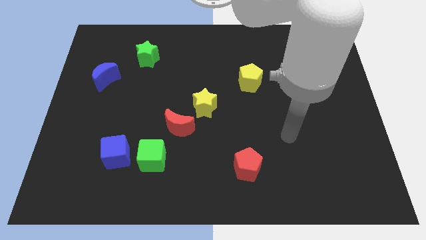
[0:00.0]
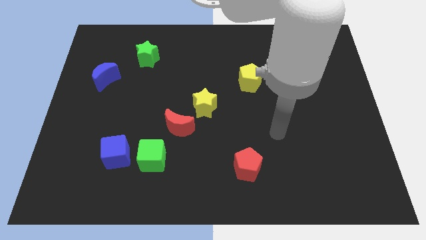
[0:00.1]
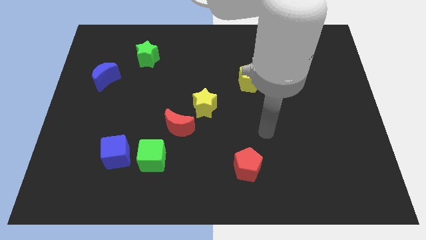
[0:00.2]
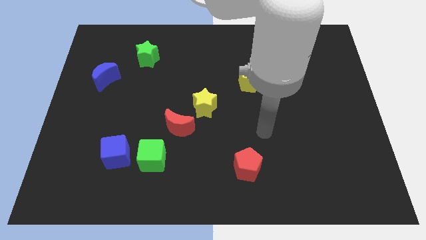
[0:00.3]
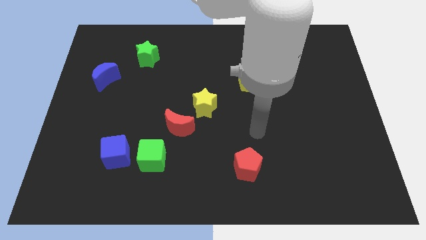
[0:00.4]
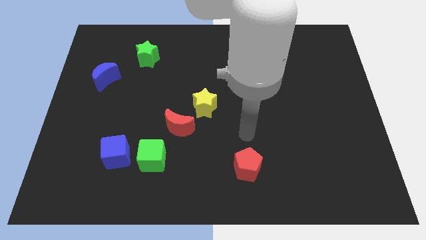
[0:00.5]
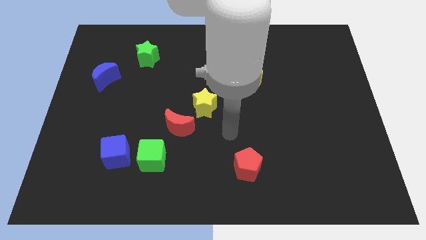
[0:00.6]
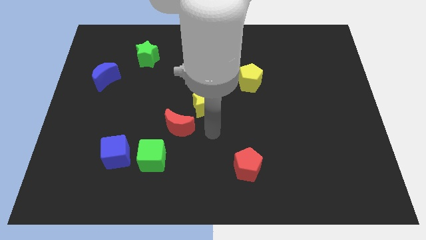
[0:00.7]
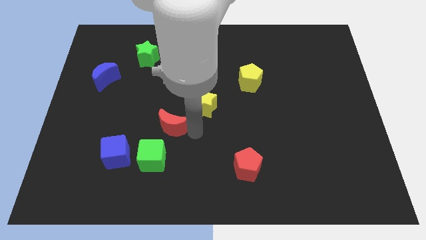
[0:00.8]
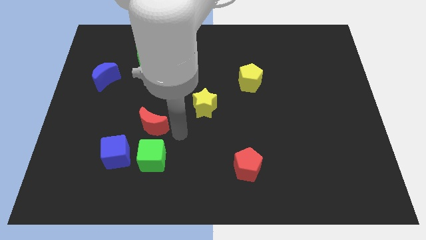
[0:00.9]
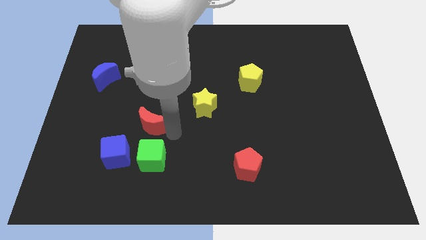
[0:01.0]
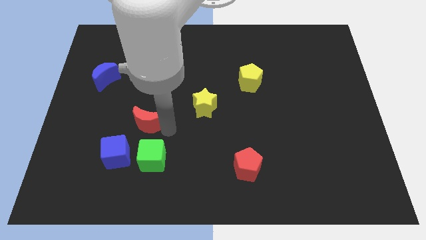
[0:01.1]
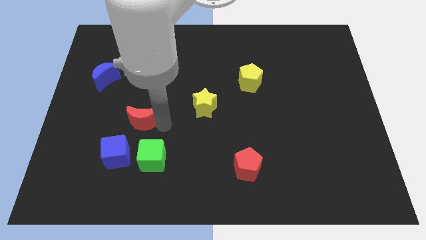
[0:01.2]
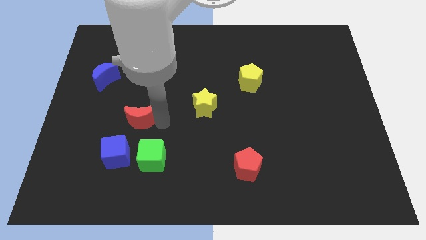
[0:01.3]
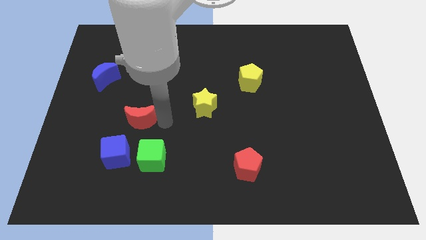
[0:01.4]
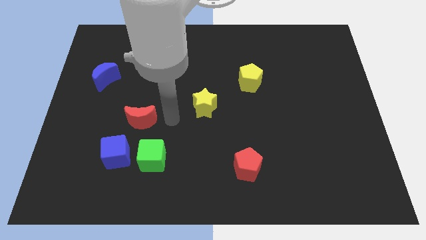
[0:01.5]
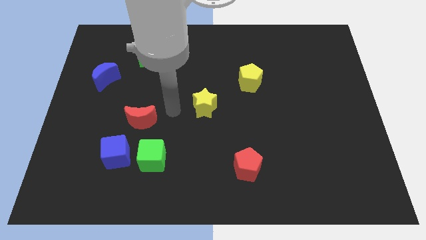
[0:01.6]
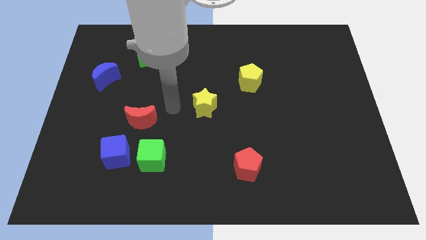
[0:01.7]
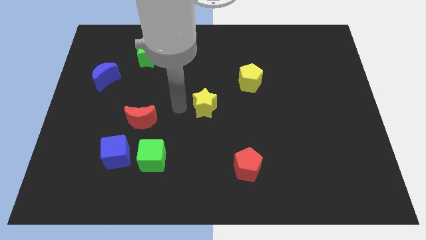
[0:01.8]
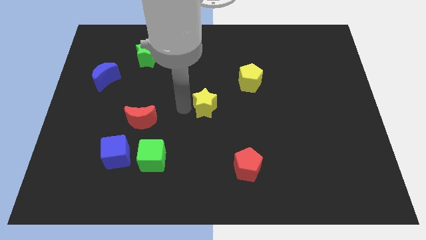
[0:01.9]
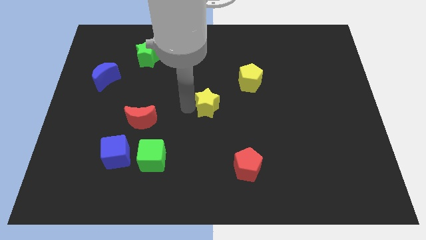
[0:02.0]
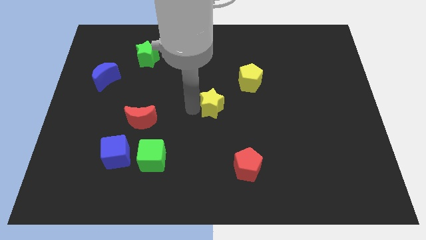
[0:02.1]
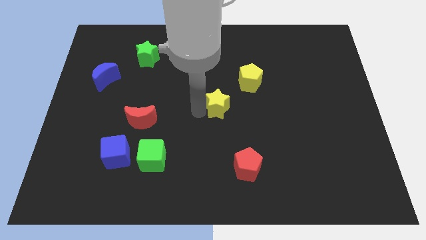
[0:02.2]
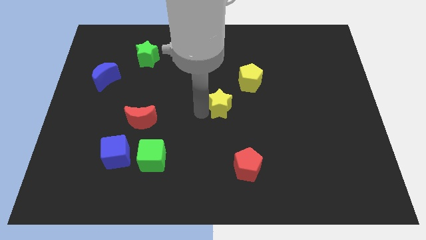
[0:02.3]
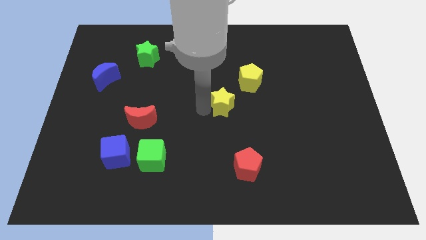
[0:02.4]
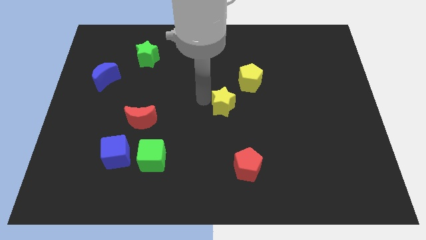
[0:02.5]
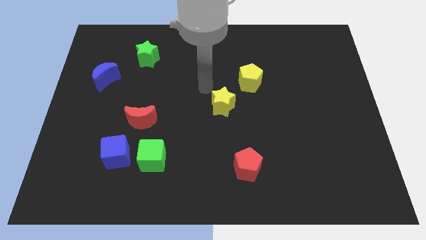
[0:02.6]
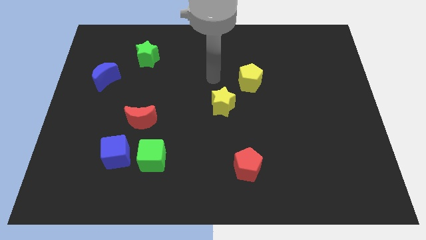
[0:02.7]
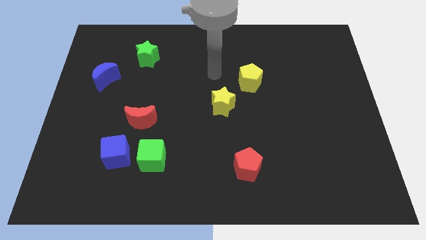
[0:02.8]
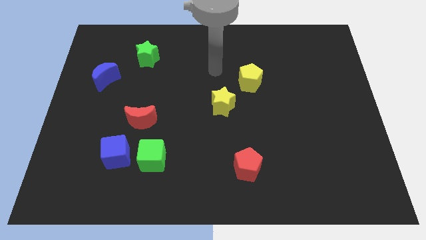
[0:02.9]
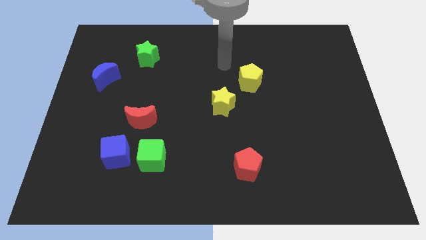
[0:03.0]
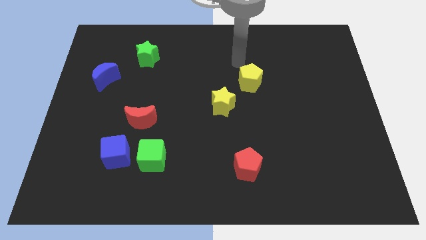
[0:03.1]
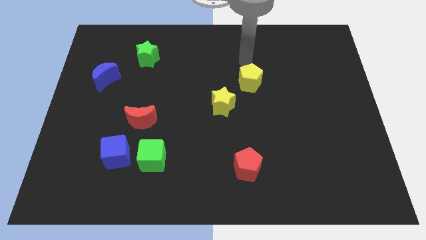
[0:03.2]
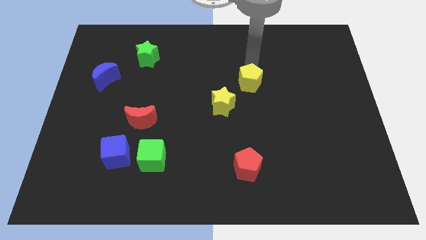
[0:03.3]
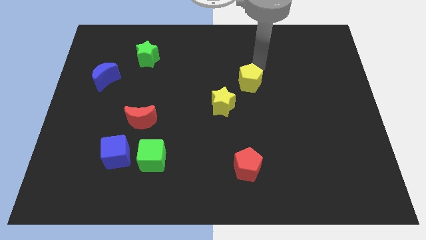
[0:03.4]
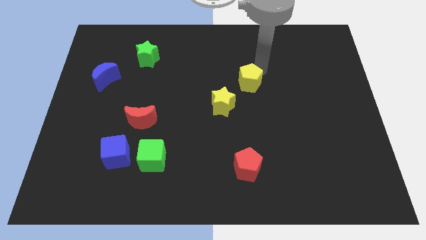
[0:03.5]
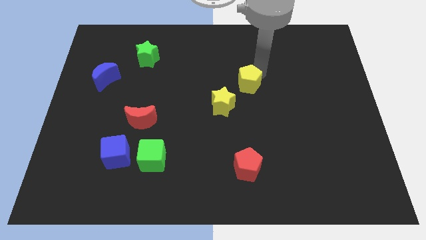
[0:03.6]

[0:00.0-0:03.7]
separate the yellow star and the red crescent

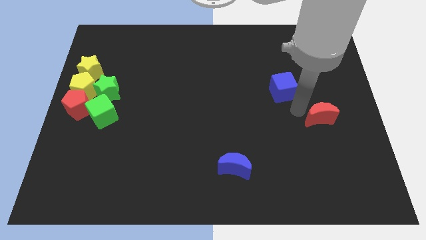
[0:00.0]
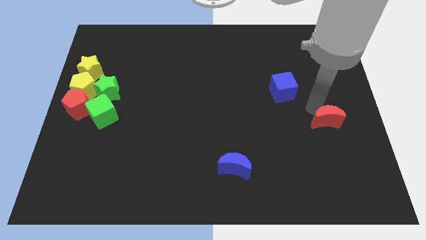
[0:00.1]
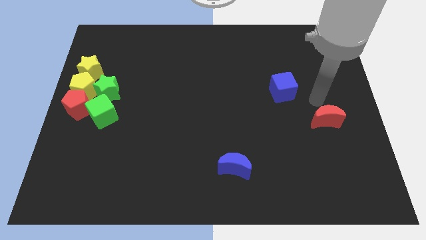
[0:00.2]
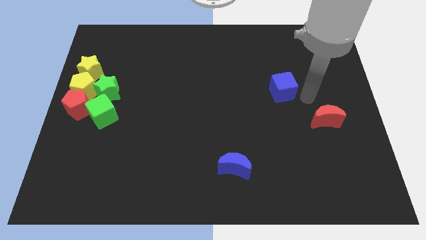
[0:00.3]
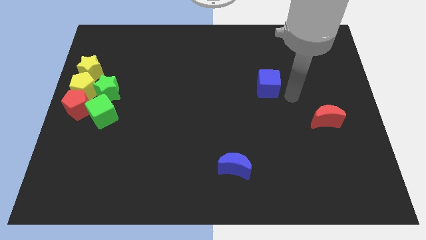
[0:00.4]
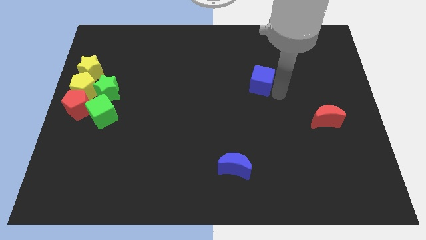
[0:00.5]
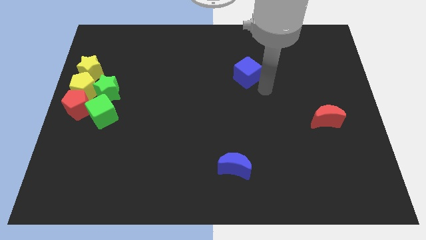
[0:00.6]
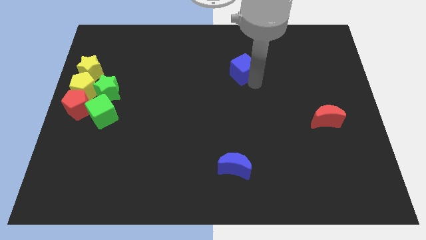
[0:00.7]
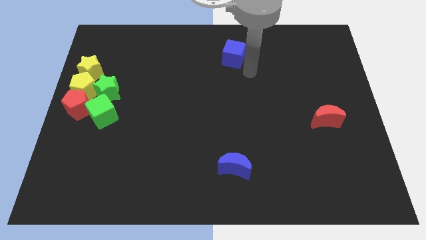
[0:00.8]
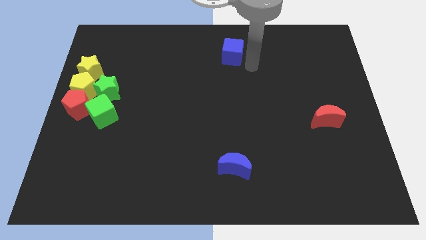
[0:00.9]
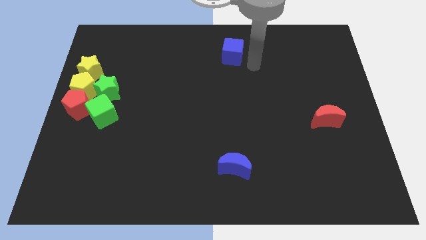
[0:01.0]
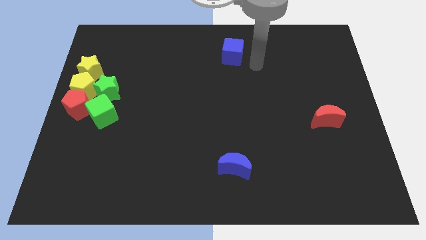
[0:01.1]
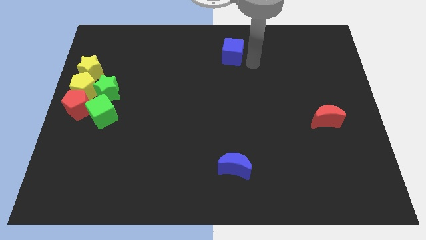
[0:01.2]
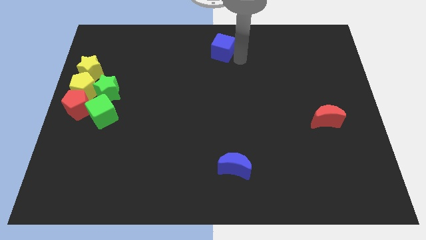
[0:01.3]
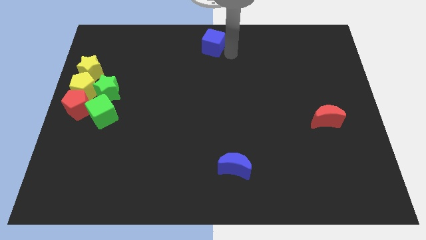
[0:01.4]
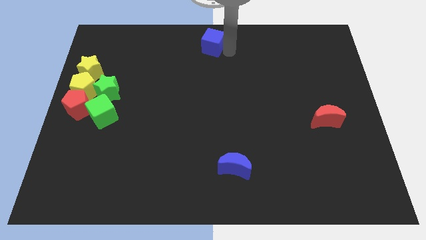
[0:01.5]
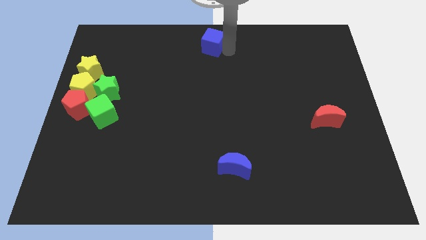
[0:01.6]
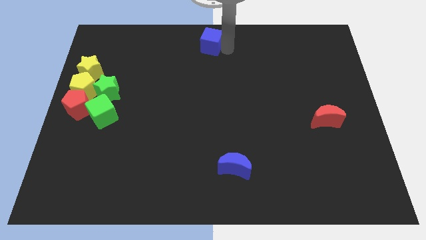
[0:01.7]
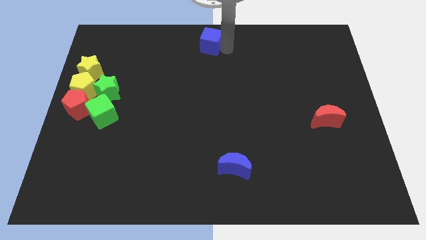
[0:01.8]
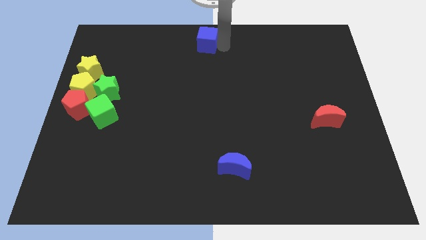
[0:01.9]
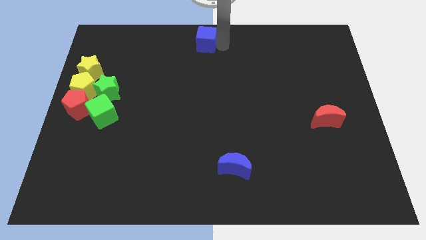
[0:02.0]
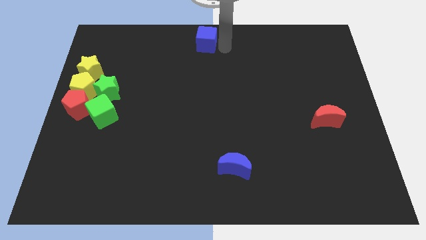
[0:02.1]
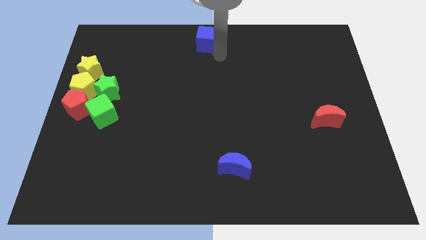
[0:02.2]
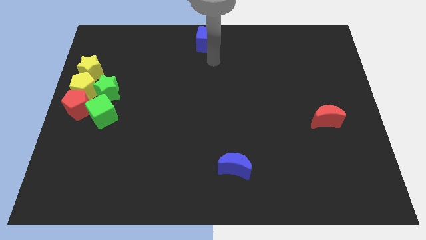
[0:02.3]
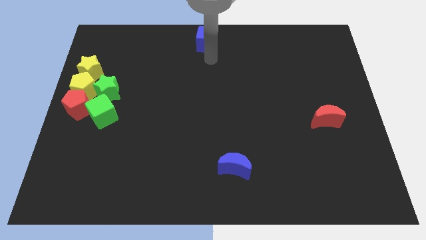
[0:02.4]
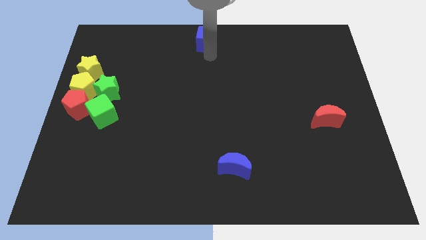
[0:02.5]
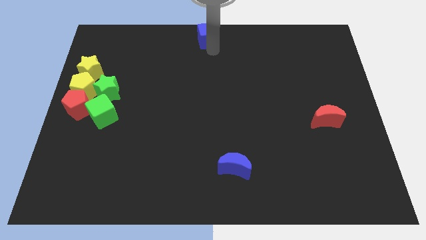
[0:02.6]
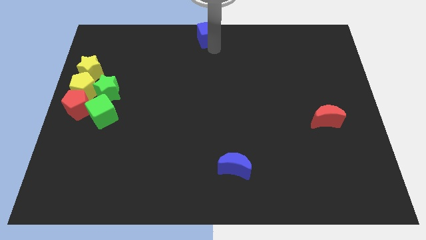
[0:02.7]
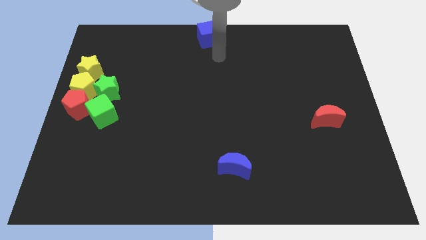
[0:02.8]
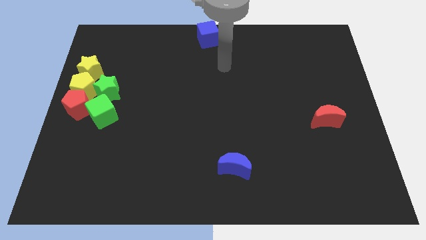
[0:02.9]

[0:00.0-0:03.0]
place blue cube at center top

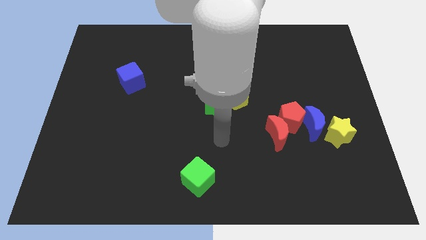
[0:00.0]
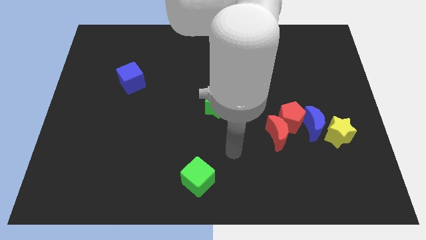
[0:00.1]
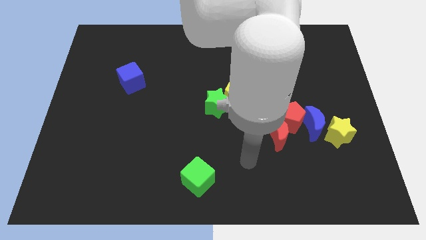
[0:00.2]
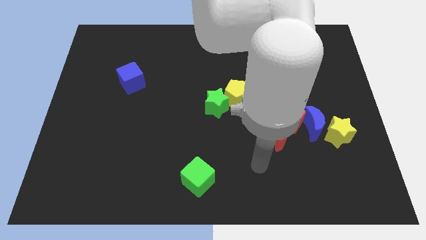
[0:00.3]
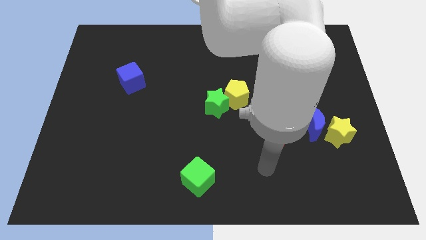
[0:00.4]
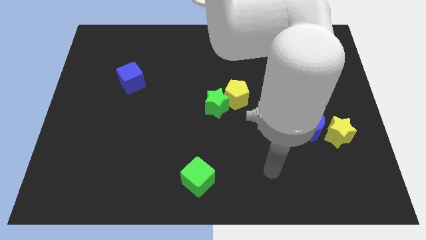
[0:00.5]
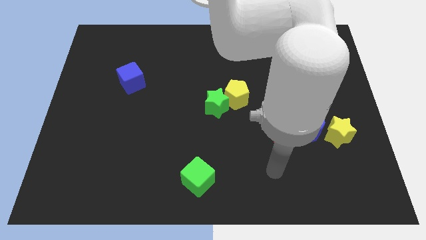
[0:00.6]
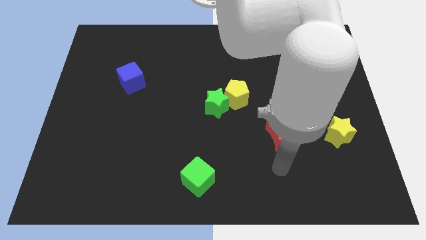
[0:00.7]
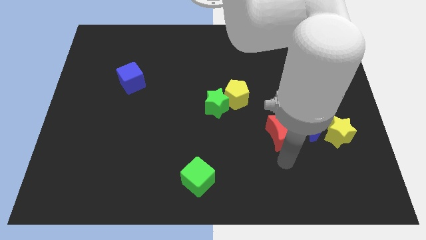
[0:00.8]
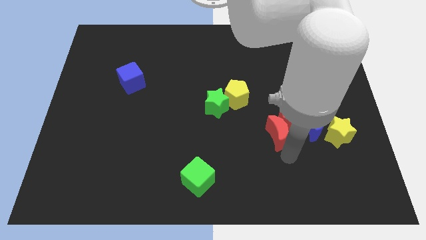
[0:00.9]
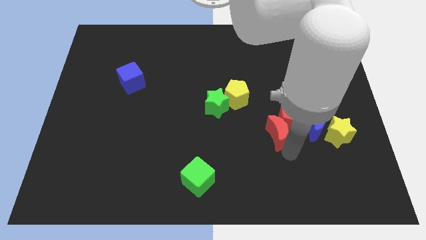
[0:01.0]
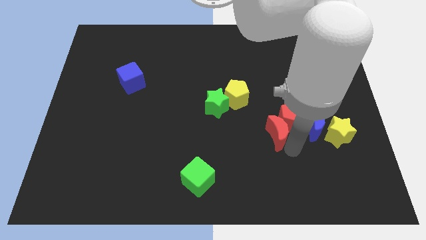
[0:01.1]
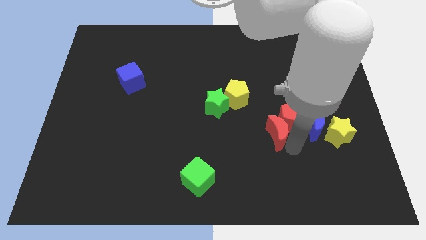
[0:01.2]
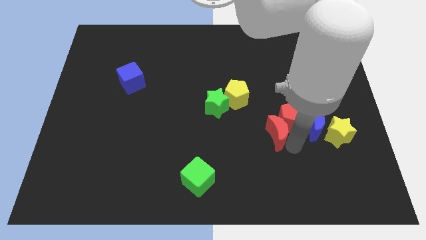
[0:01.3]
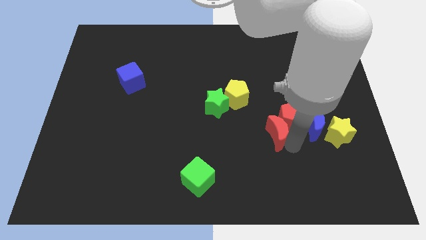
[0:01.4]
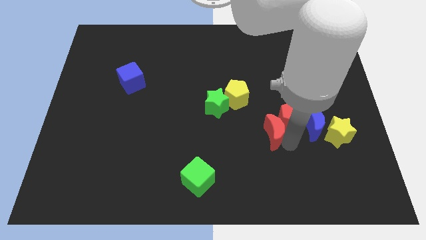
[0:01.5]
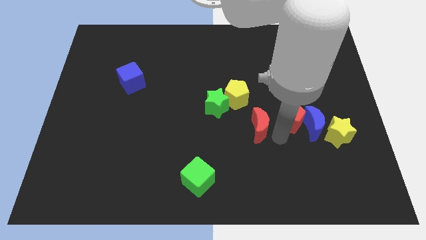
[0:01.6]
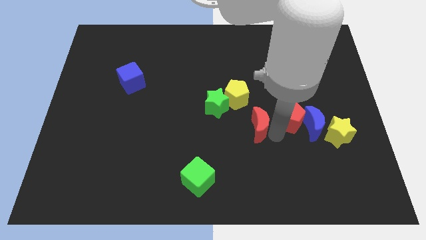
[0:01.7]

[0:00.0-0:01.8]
separate the red objects on the right center

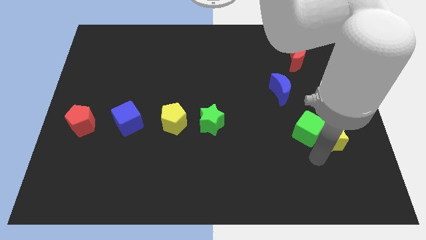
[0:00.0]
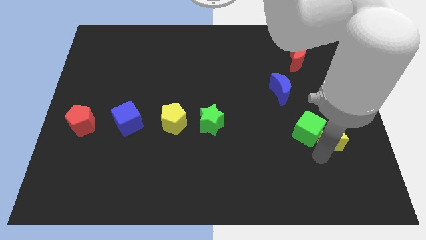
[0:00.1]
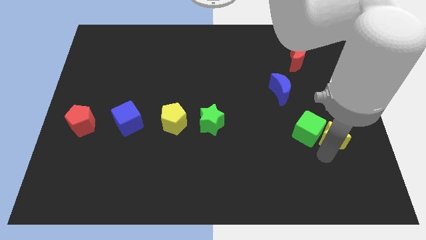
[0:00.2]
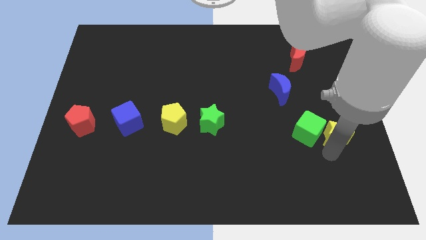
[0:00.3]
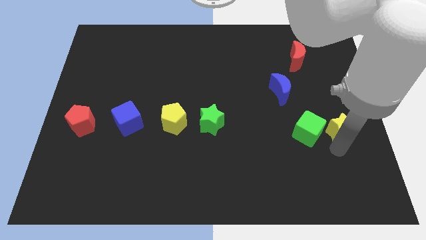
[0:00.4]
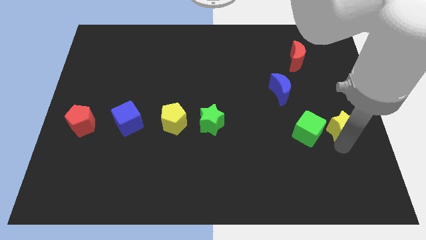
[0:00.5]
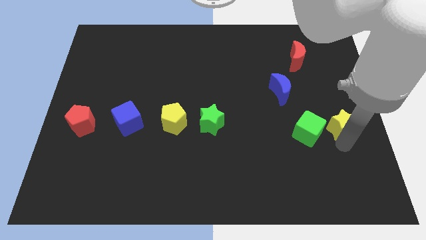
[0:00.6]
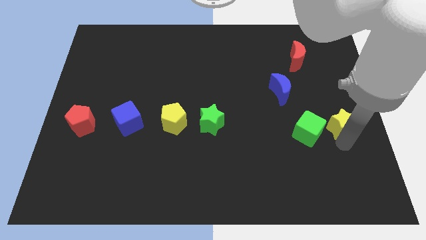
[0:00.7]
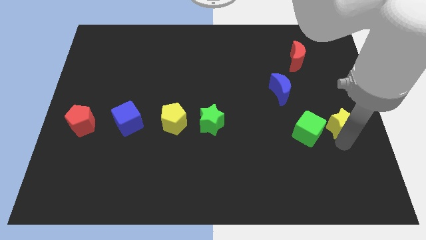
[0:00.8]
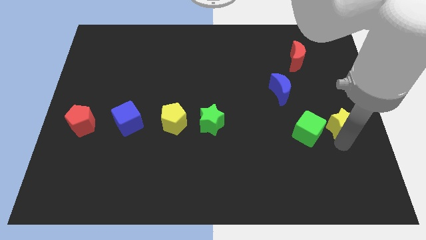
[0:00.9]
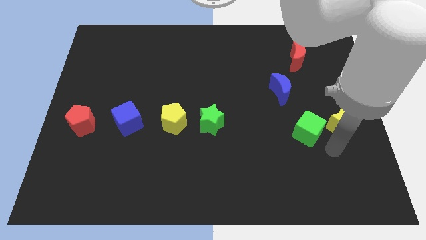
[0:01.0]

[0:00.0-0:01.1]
move the yellow star slightly towards up
